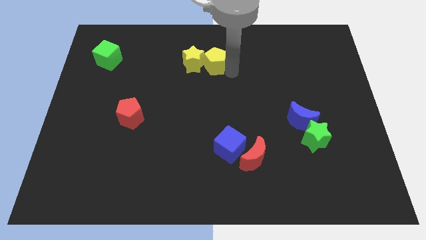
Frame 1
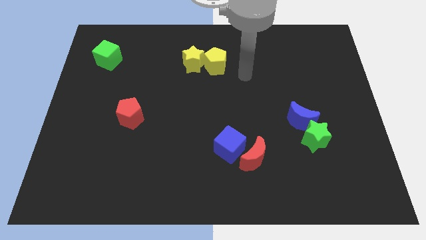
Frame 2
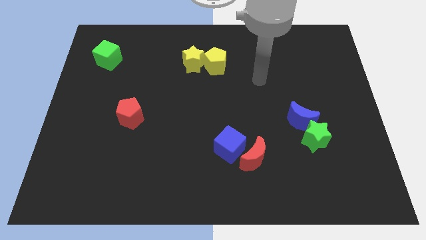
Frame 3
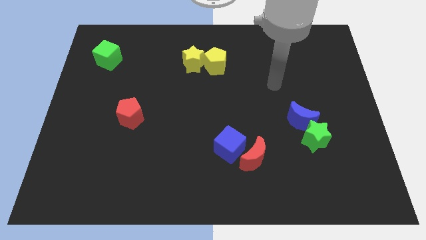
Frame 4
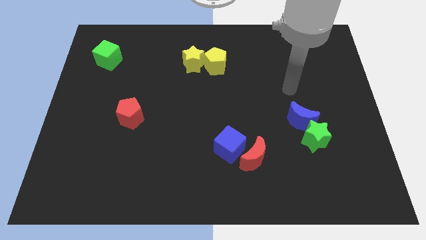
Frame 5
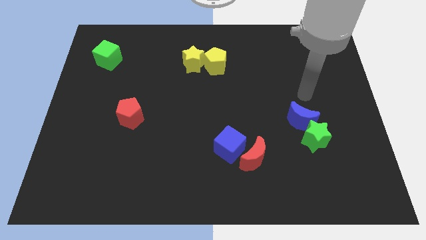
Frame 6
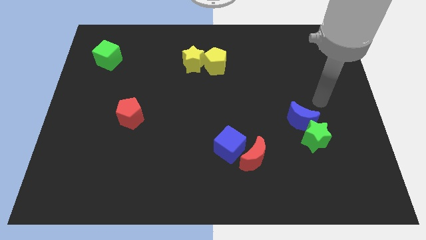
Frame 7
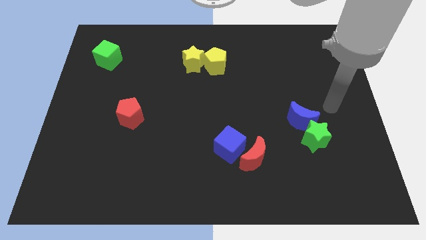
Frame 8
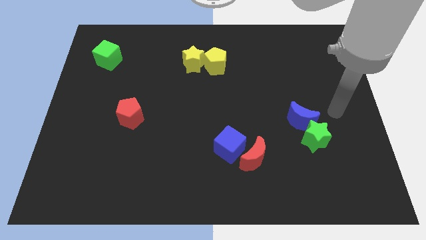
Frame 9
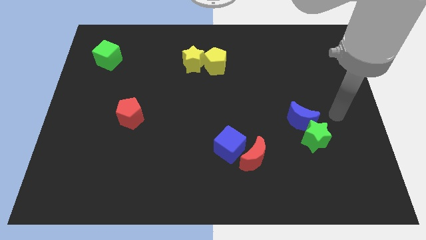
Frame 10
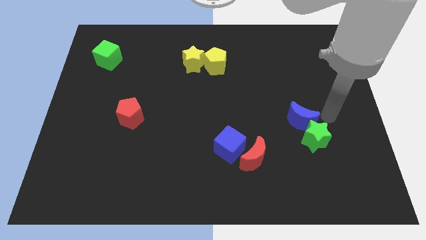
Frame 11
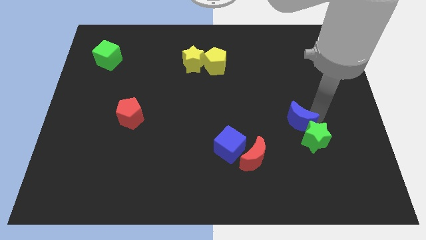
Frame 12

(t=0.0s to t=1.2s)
move the arm close to the blue moon

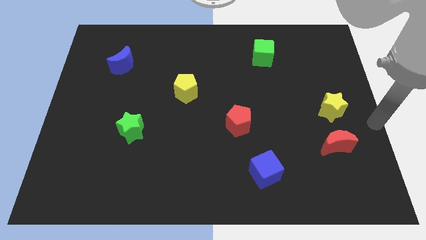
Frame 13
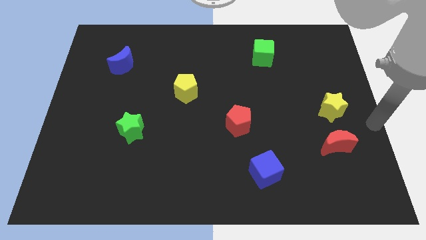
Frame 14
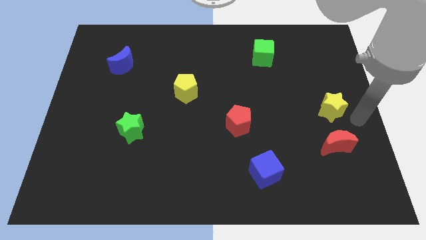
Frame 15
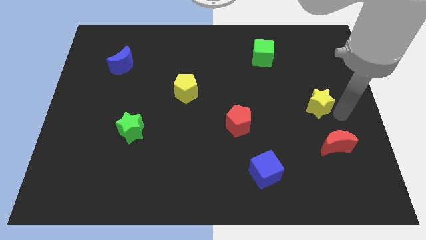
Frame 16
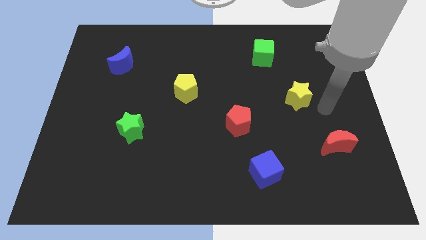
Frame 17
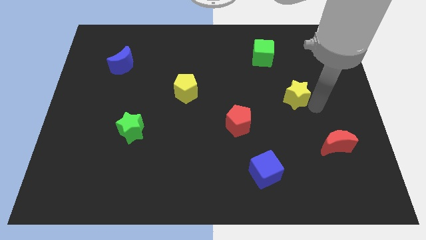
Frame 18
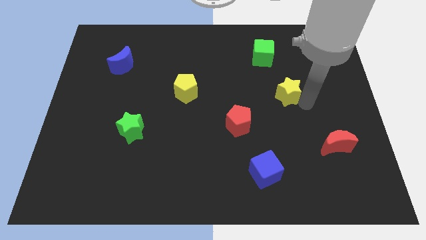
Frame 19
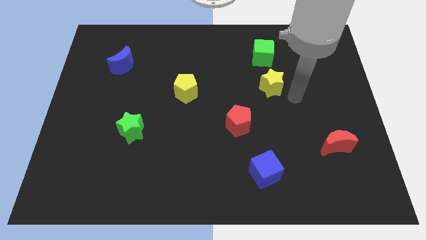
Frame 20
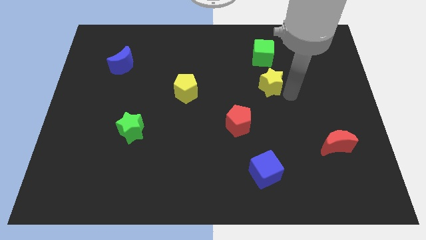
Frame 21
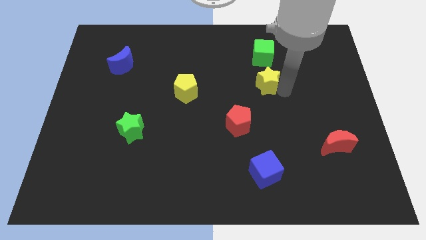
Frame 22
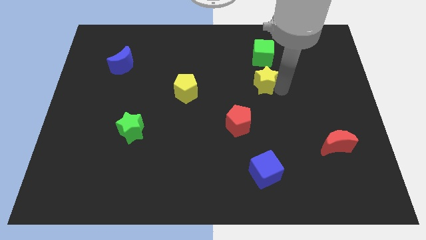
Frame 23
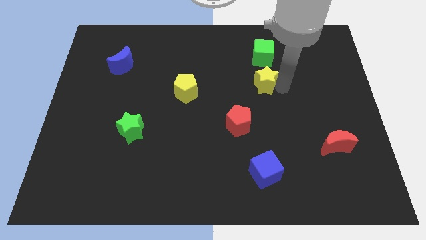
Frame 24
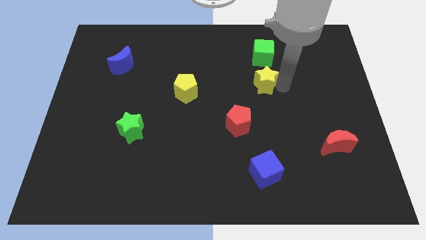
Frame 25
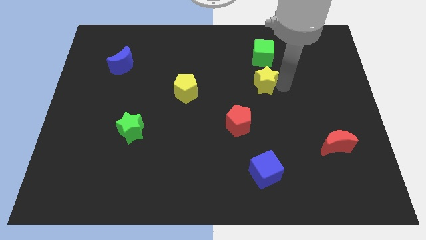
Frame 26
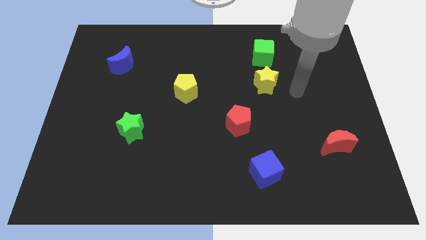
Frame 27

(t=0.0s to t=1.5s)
push the yellow star to the bottom side of the green cube

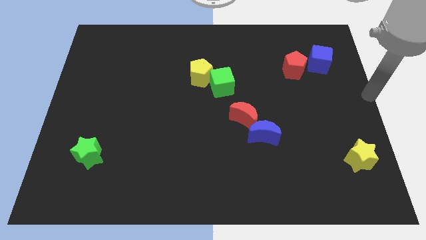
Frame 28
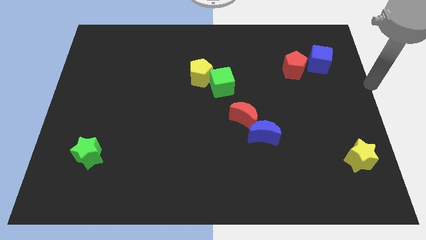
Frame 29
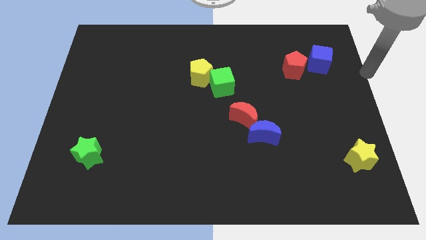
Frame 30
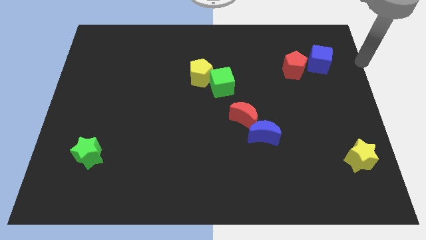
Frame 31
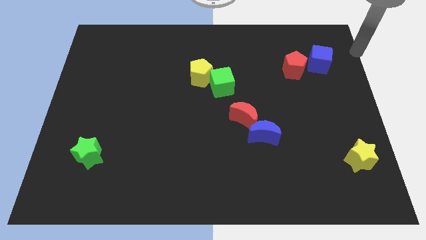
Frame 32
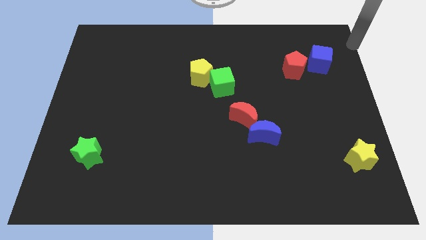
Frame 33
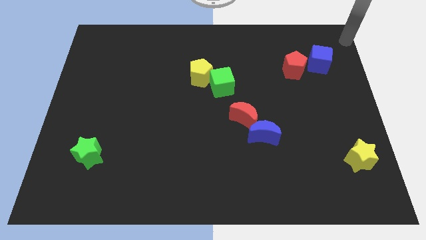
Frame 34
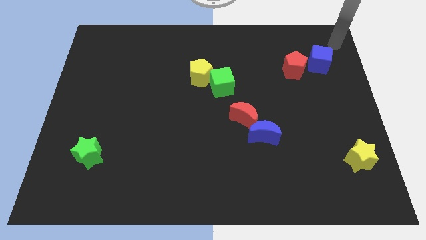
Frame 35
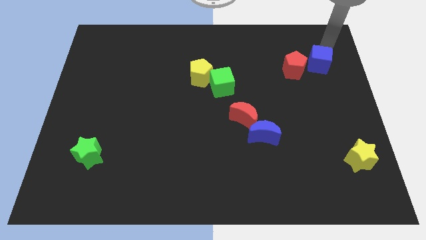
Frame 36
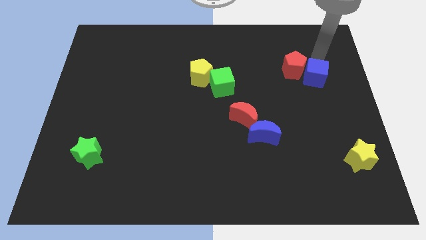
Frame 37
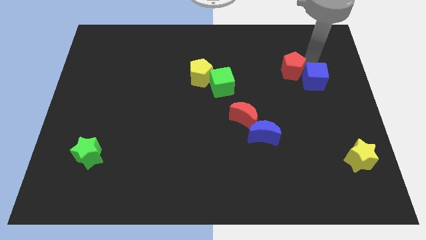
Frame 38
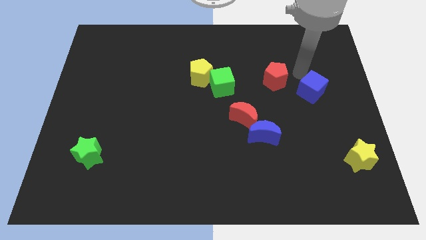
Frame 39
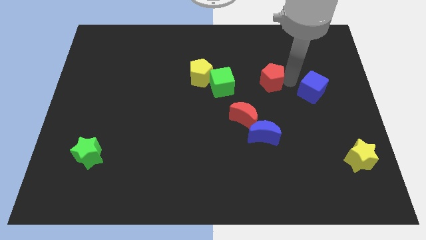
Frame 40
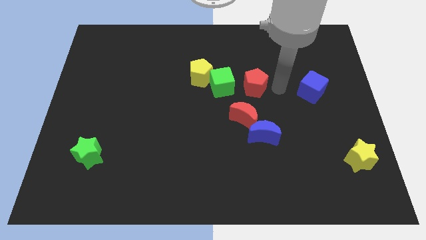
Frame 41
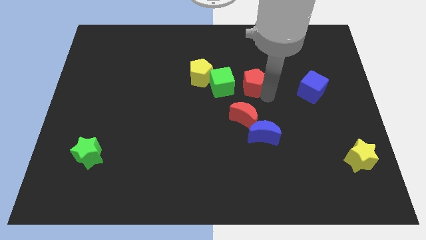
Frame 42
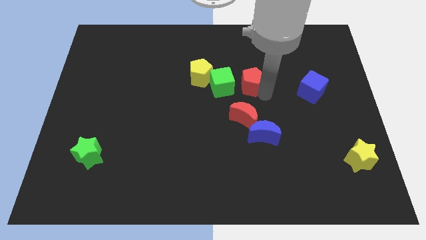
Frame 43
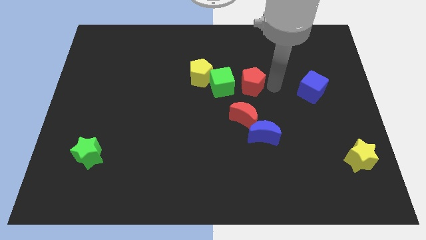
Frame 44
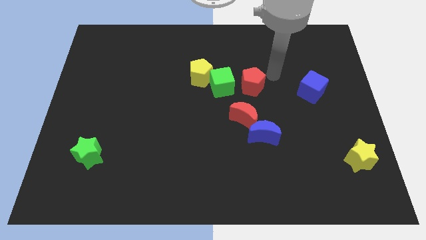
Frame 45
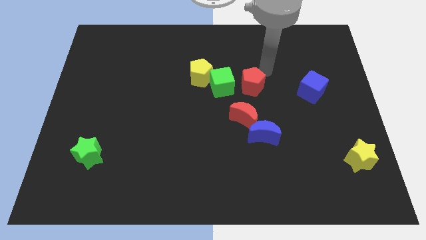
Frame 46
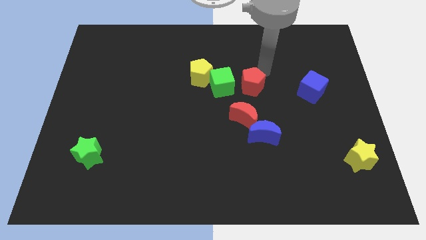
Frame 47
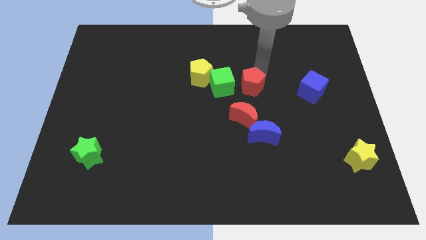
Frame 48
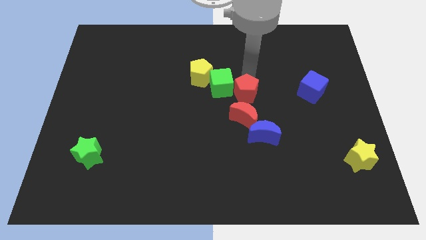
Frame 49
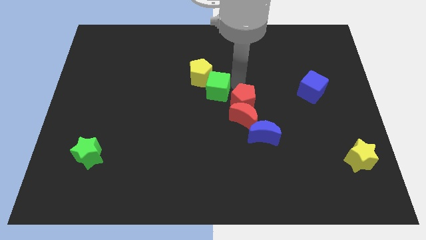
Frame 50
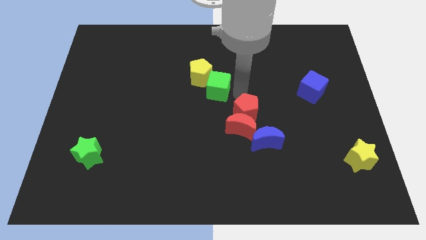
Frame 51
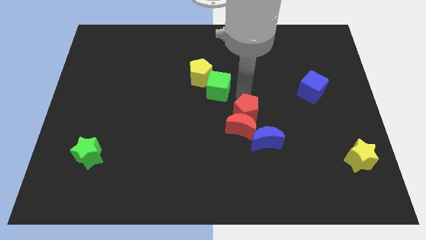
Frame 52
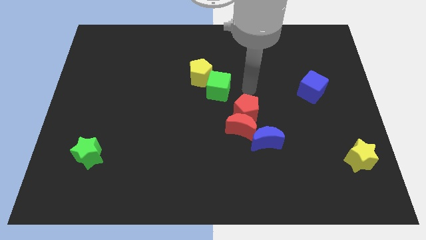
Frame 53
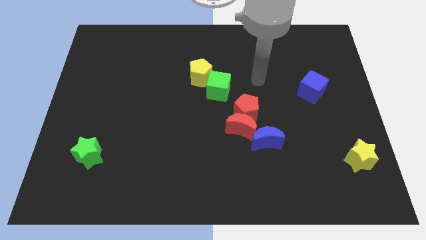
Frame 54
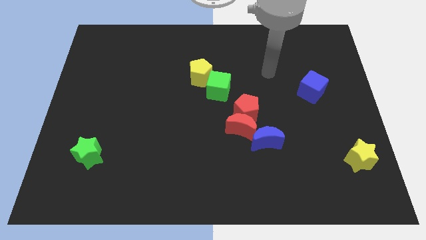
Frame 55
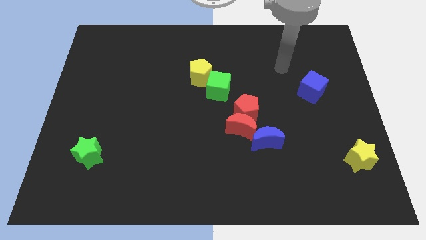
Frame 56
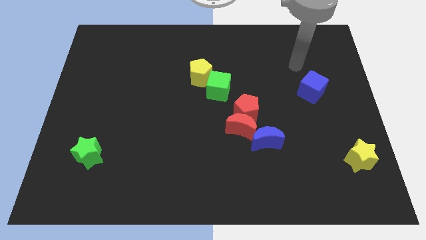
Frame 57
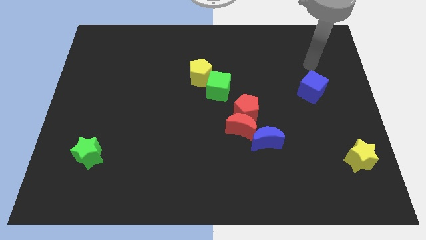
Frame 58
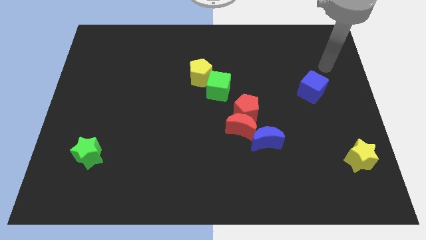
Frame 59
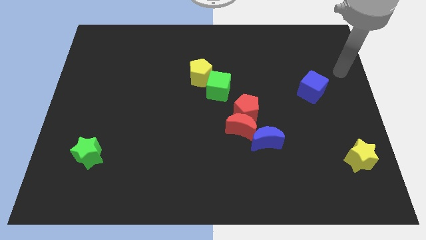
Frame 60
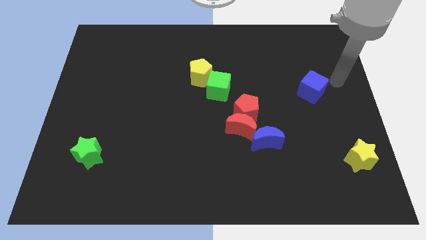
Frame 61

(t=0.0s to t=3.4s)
push the red pentagon into the red crescent and go away

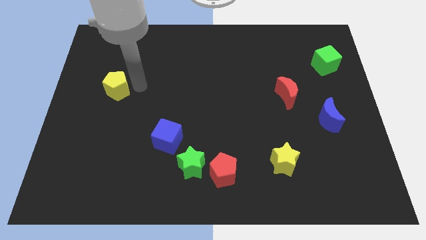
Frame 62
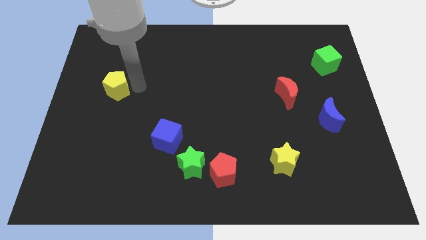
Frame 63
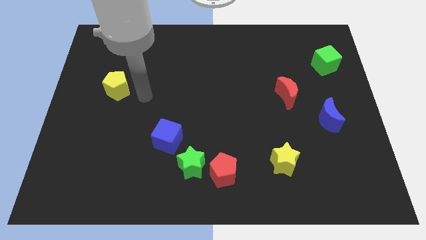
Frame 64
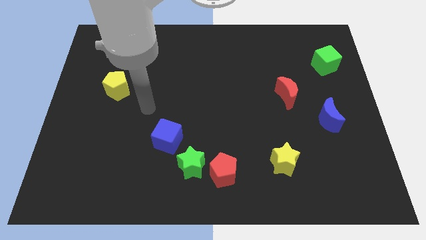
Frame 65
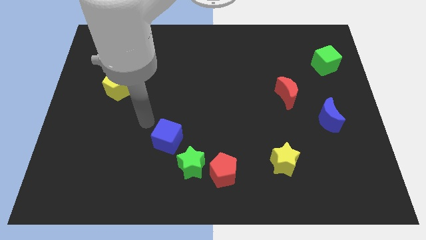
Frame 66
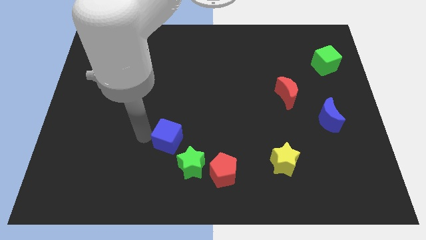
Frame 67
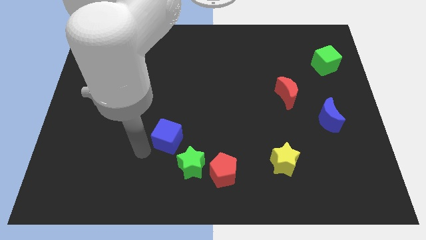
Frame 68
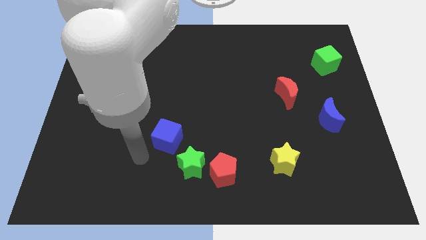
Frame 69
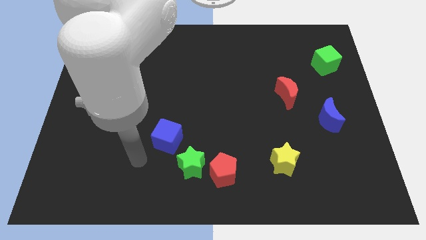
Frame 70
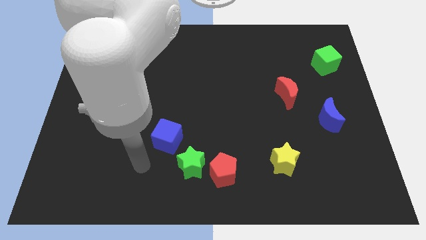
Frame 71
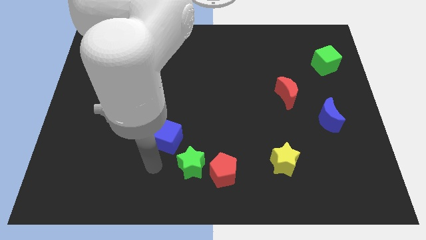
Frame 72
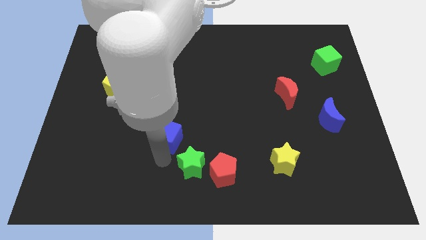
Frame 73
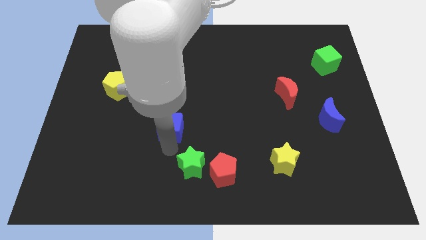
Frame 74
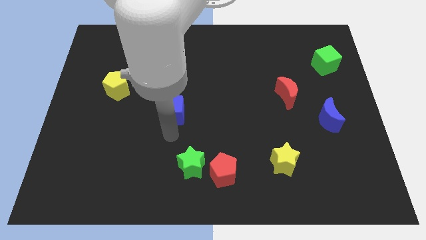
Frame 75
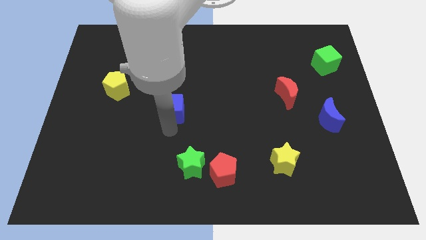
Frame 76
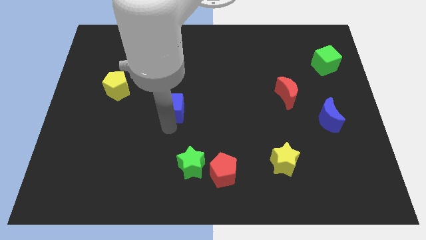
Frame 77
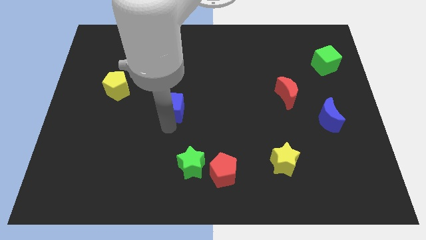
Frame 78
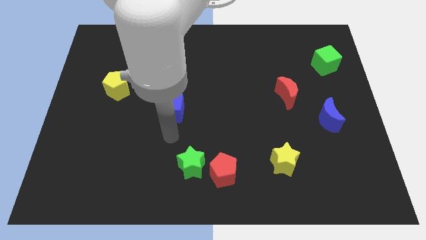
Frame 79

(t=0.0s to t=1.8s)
slightly move the blue cube upwards

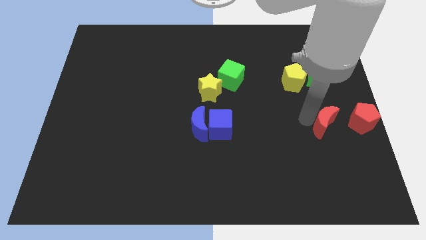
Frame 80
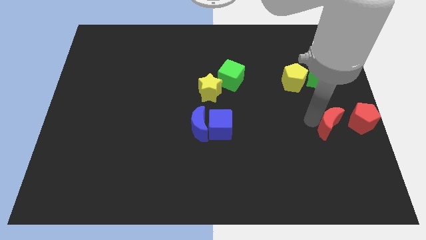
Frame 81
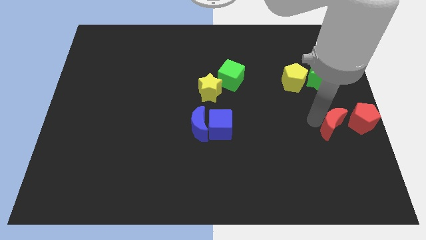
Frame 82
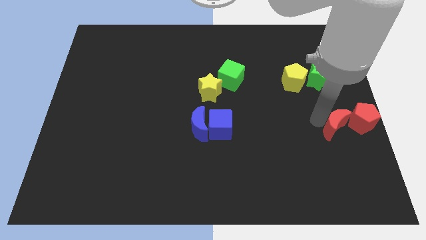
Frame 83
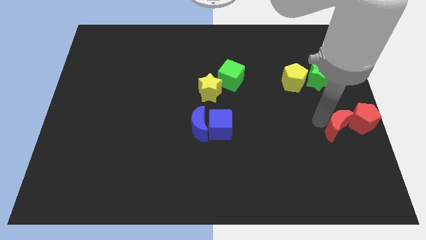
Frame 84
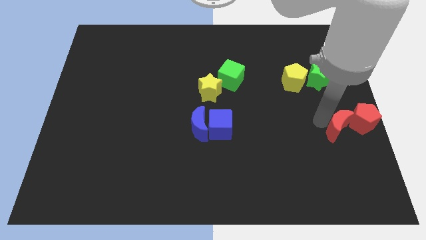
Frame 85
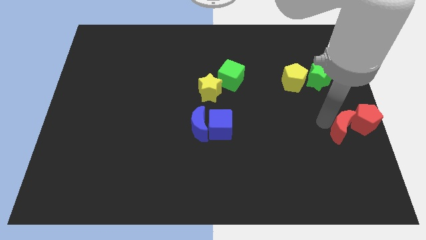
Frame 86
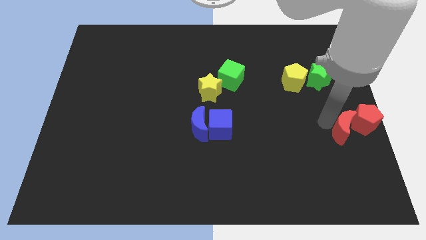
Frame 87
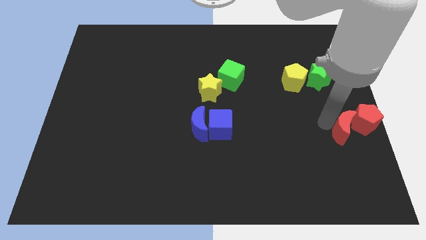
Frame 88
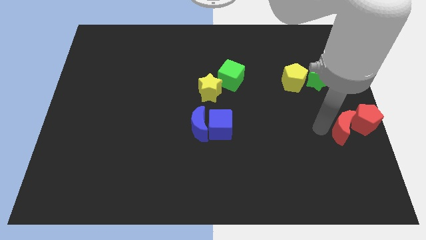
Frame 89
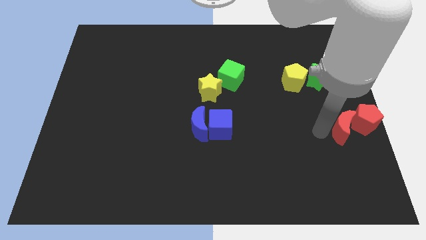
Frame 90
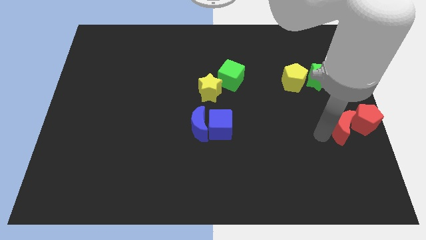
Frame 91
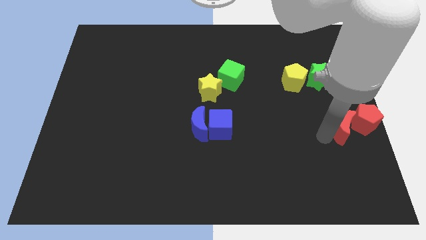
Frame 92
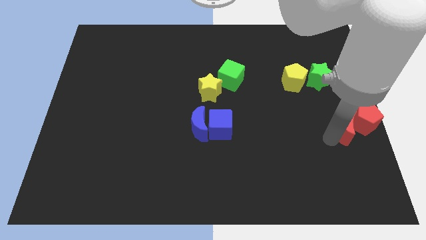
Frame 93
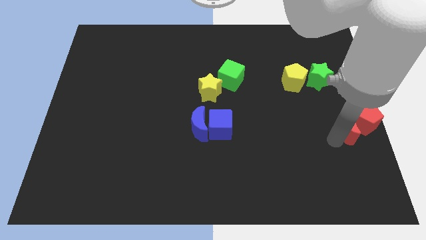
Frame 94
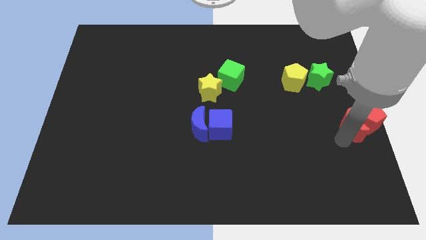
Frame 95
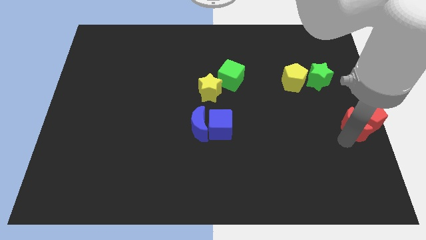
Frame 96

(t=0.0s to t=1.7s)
move the red moon to the bottom left of the red pentagon
